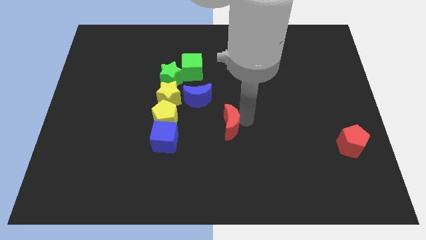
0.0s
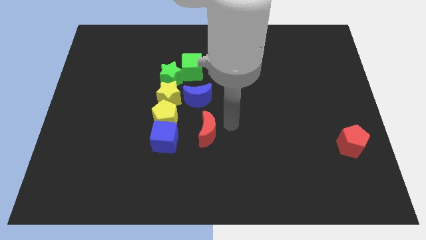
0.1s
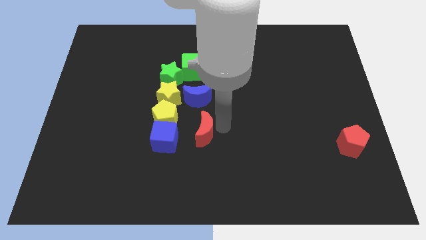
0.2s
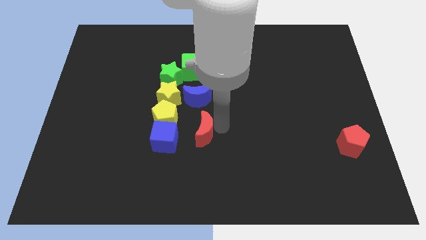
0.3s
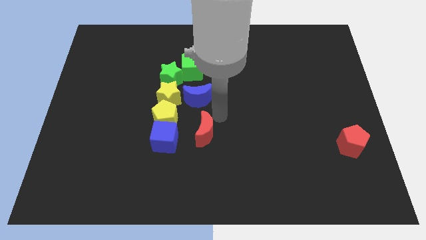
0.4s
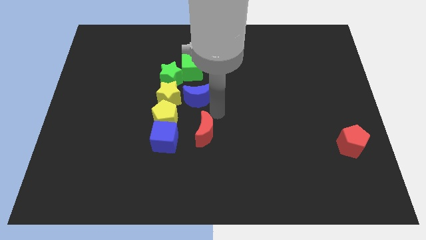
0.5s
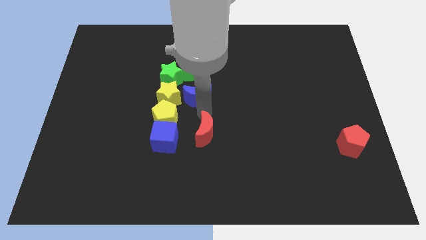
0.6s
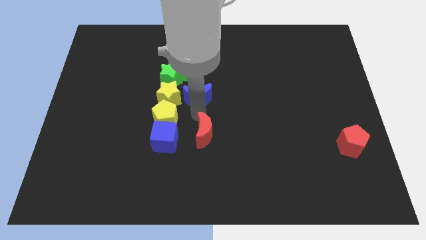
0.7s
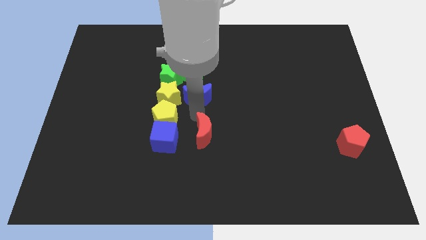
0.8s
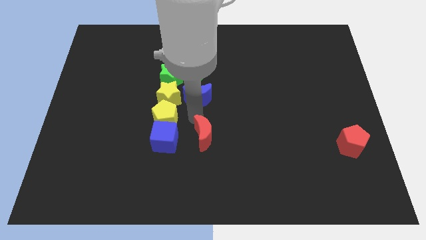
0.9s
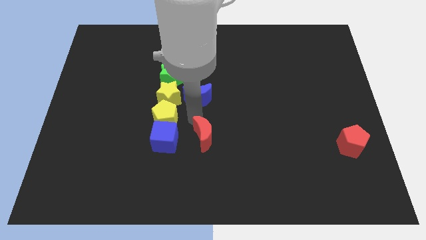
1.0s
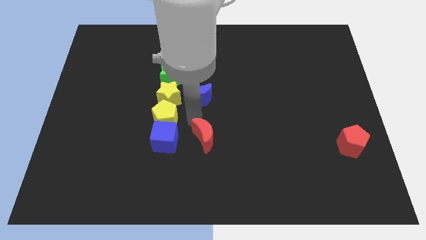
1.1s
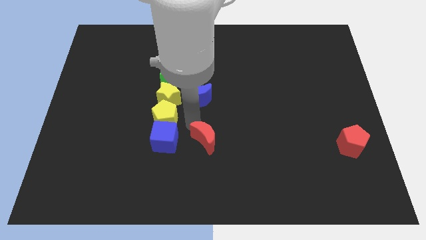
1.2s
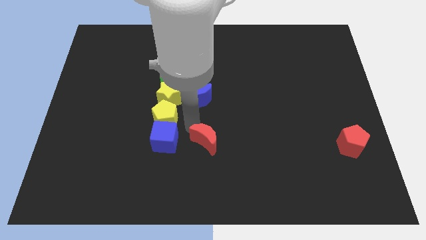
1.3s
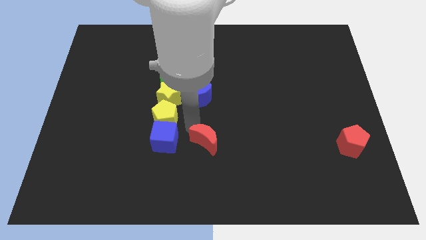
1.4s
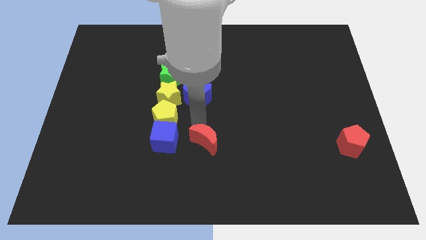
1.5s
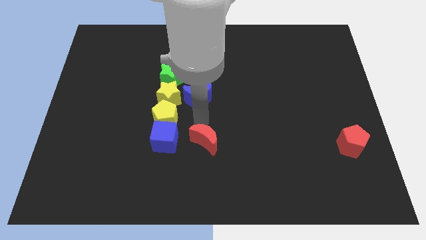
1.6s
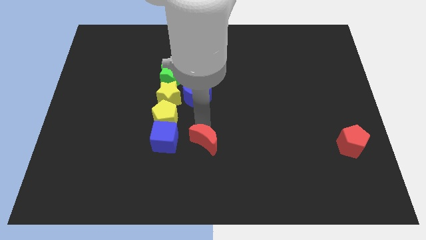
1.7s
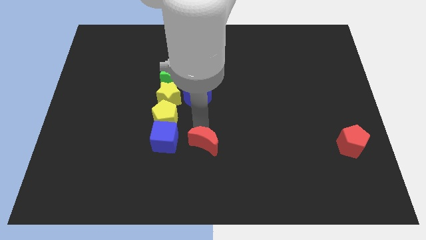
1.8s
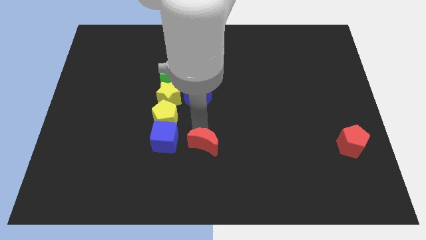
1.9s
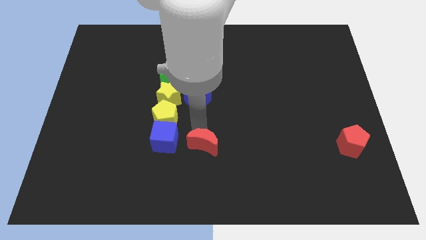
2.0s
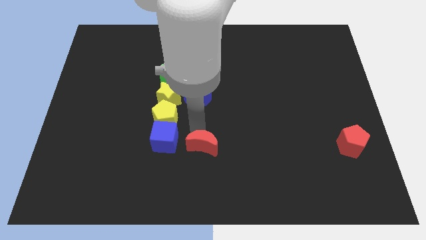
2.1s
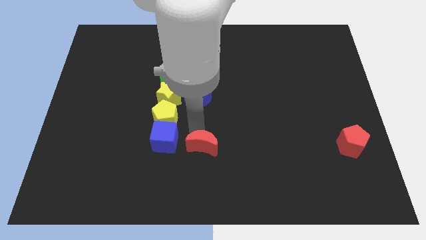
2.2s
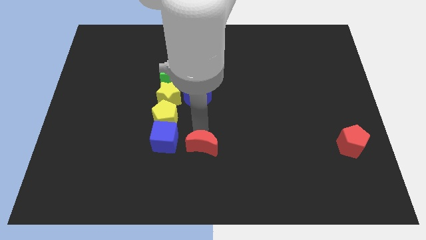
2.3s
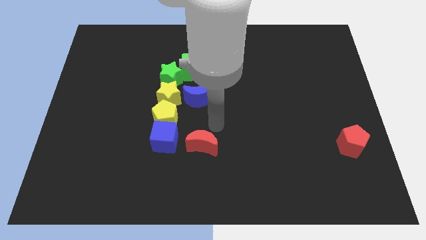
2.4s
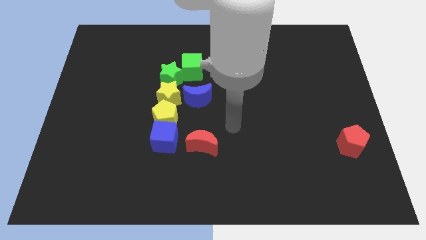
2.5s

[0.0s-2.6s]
move the red moon to the right side of the blue cube

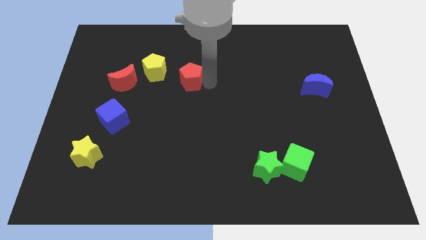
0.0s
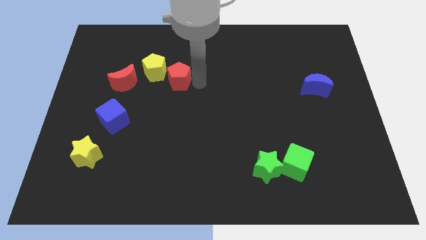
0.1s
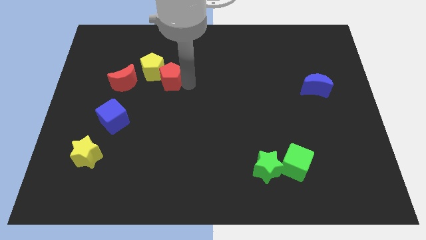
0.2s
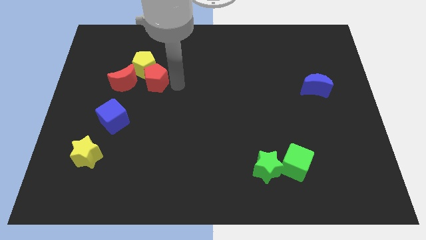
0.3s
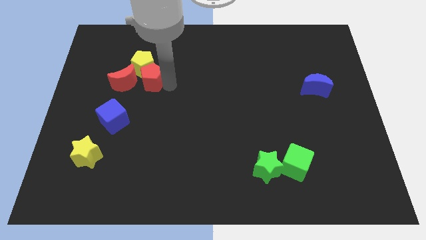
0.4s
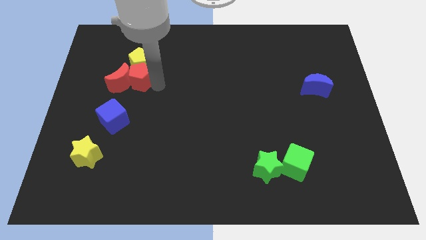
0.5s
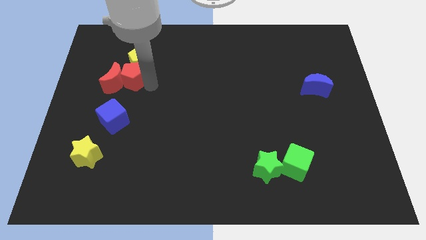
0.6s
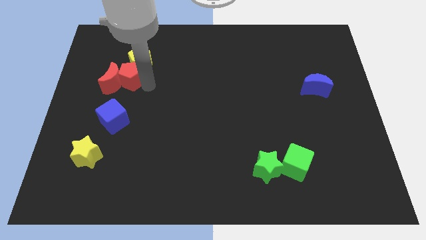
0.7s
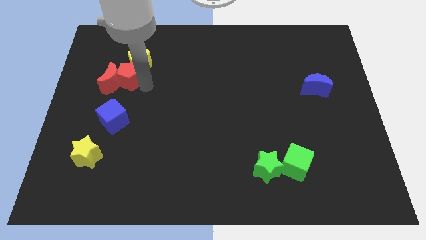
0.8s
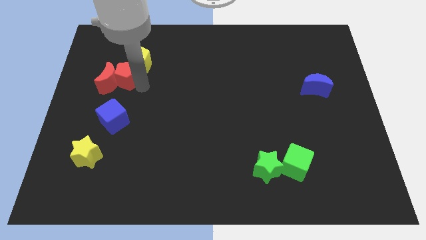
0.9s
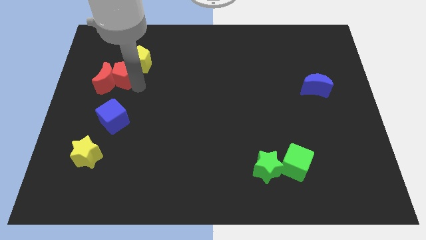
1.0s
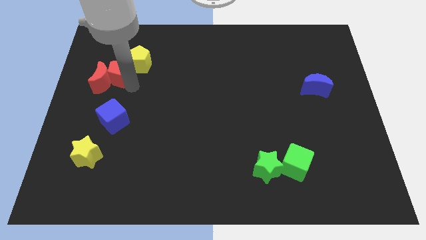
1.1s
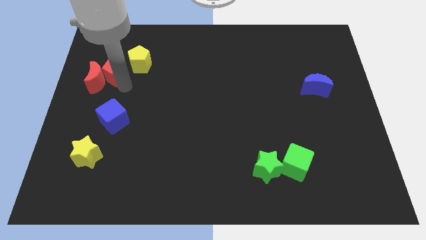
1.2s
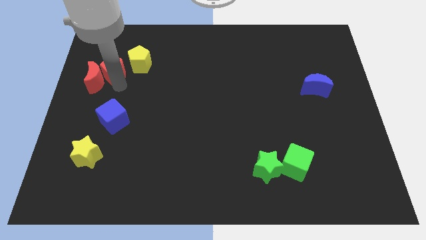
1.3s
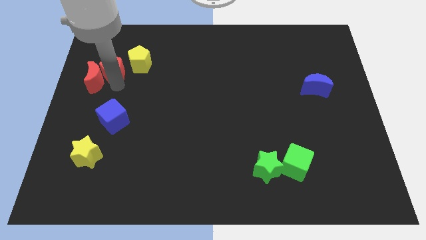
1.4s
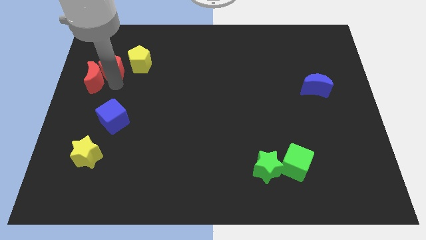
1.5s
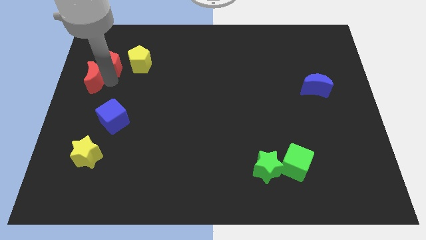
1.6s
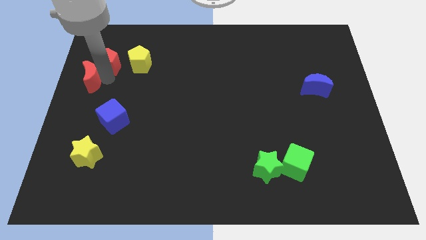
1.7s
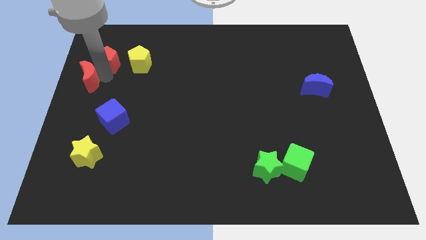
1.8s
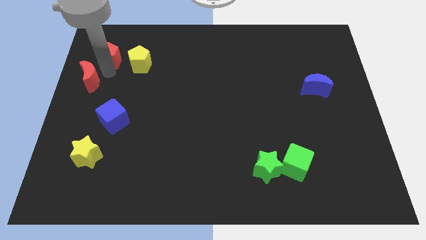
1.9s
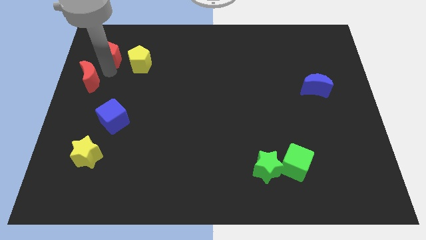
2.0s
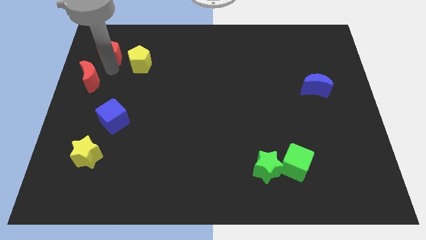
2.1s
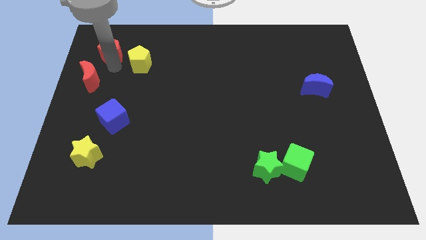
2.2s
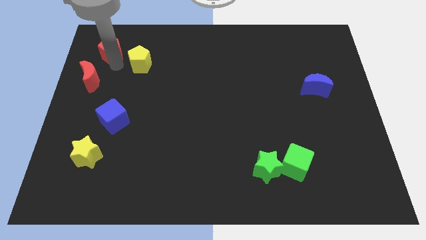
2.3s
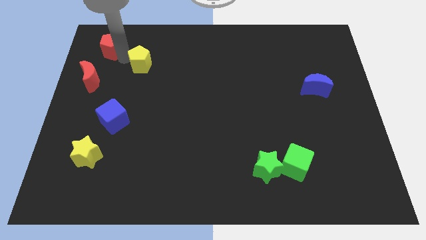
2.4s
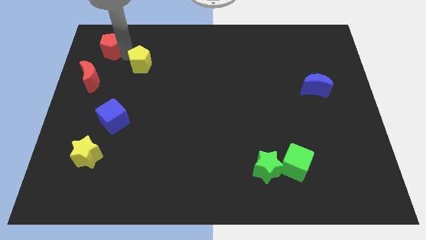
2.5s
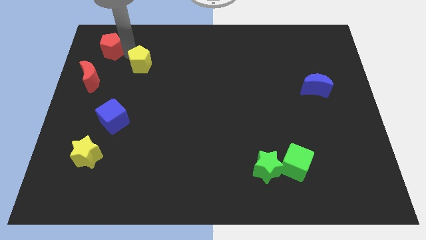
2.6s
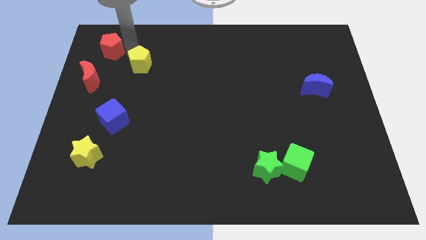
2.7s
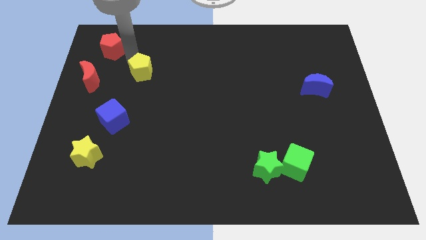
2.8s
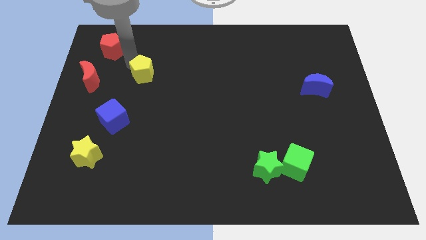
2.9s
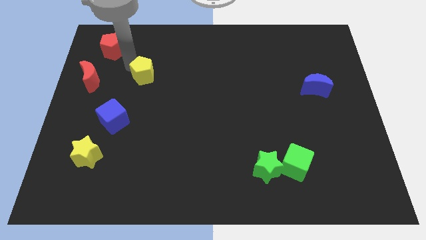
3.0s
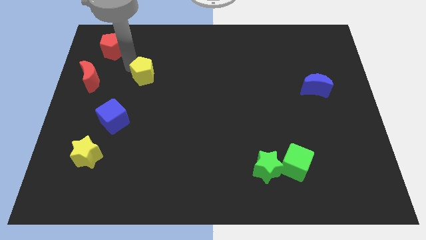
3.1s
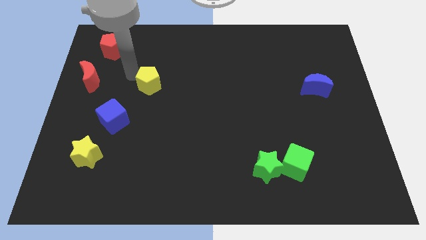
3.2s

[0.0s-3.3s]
make a triangle with the red blocks and yellow pentagon at the top left of the table

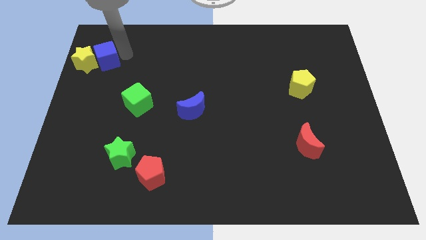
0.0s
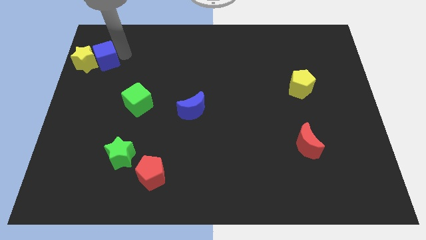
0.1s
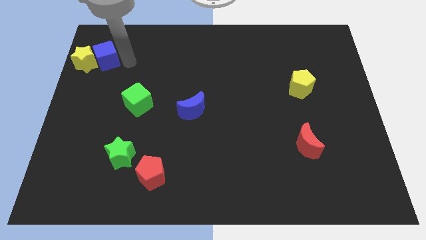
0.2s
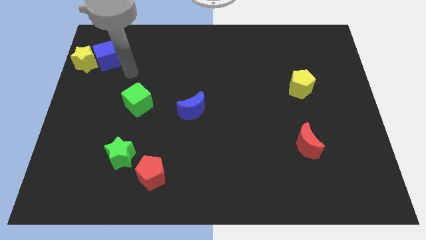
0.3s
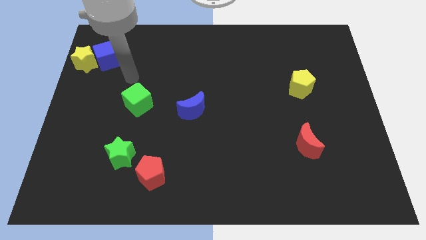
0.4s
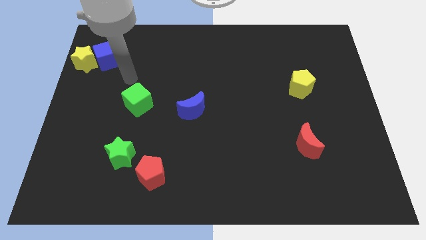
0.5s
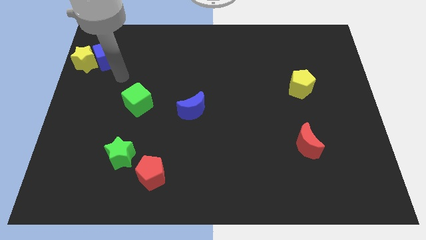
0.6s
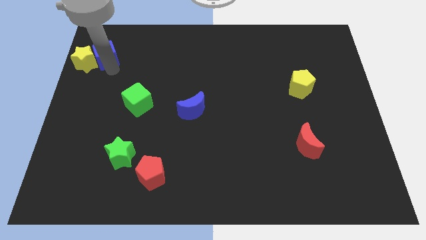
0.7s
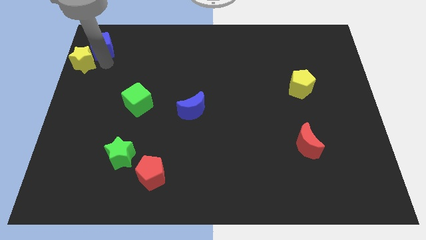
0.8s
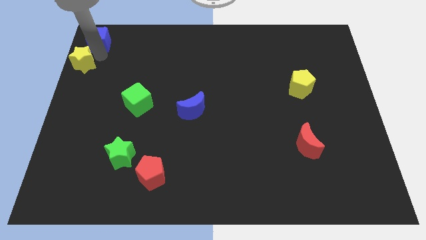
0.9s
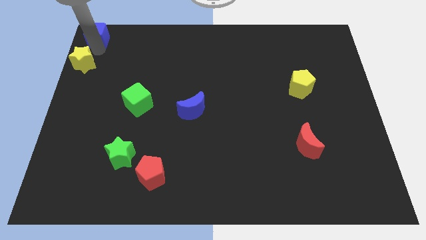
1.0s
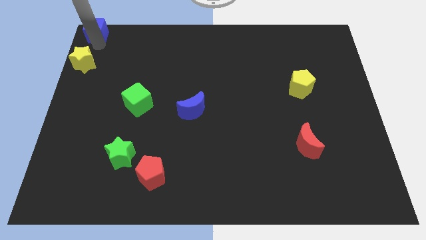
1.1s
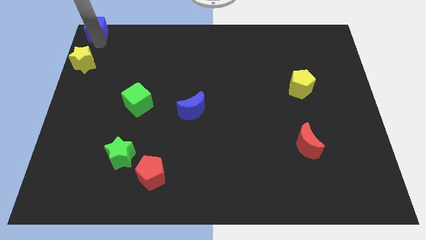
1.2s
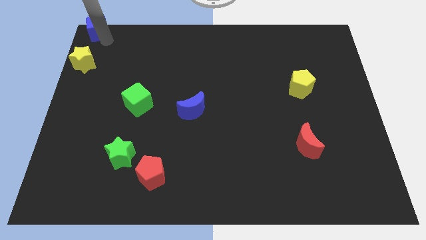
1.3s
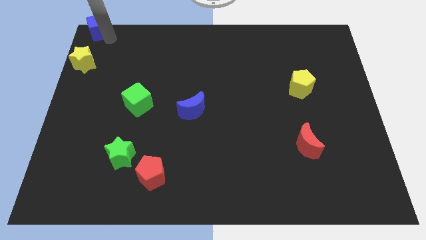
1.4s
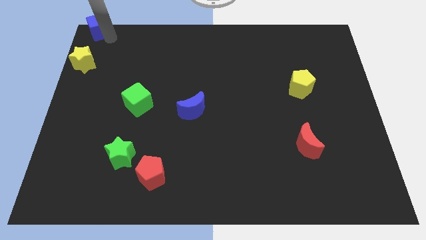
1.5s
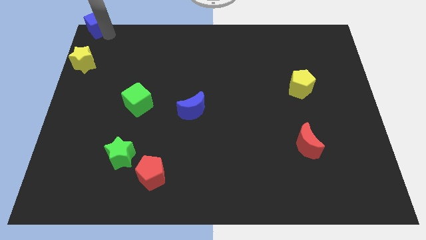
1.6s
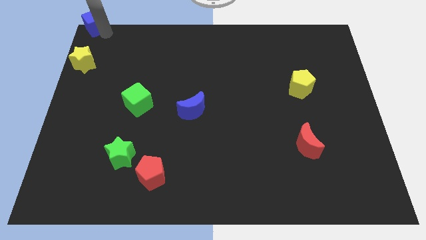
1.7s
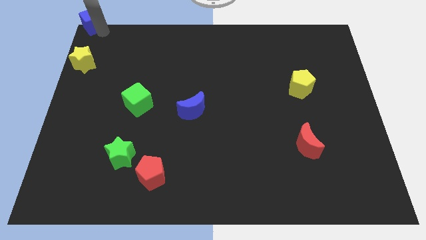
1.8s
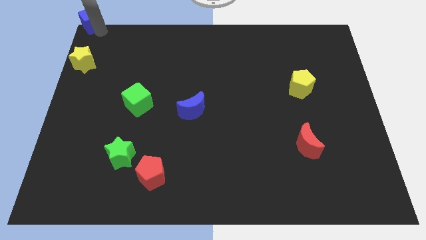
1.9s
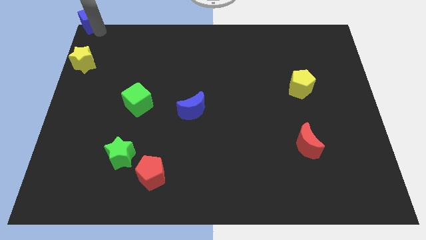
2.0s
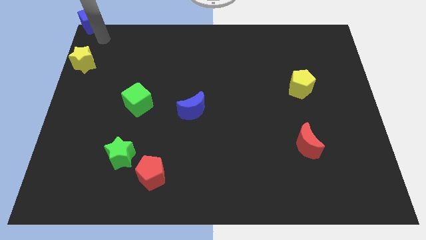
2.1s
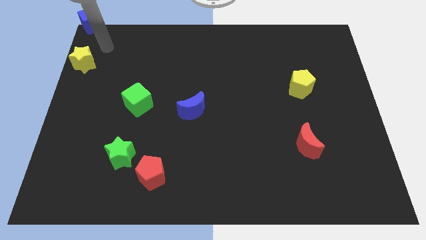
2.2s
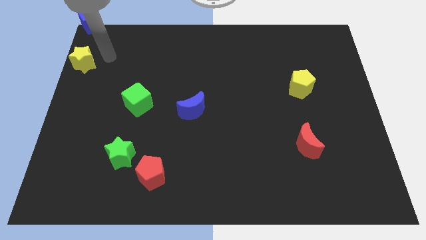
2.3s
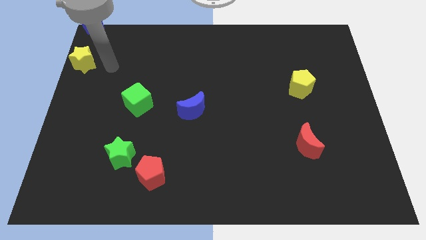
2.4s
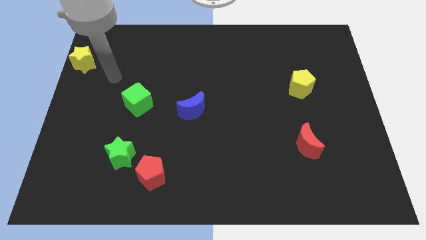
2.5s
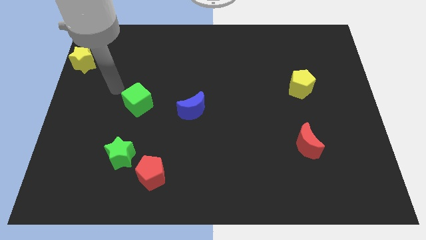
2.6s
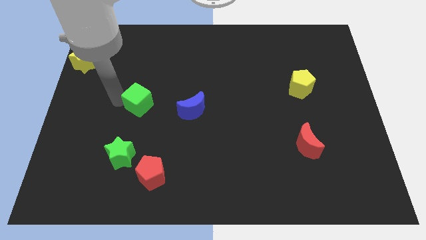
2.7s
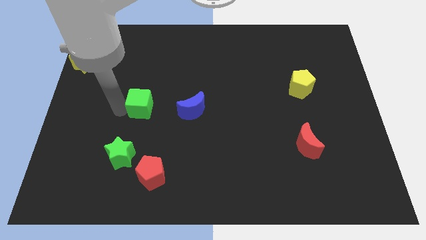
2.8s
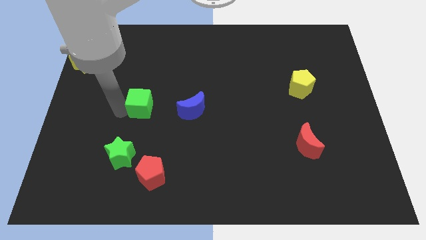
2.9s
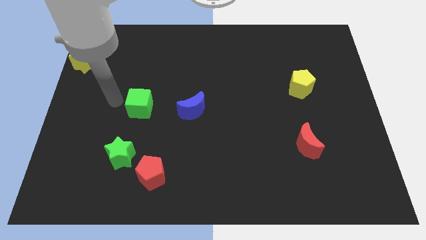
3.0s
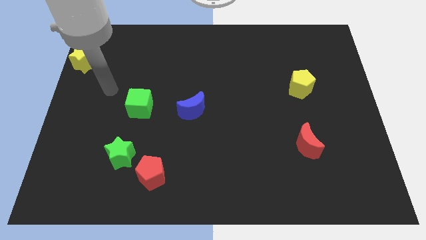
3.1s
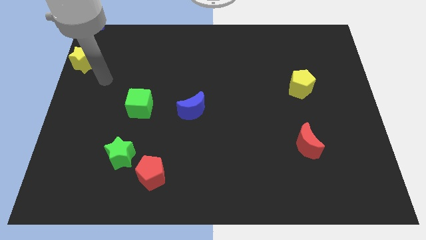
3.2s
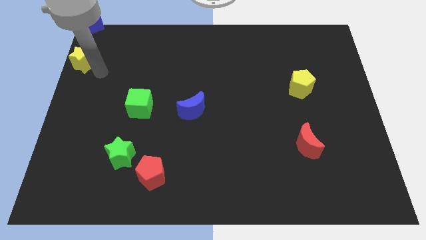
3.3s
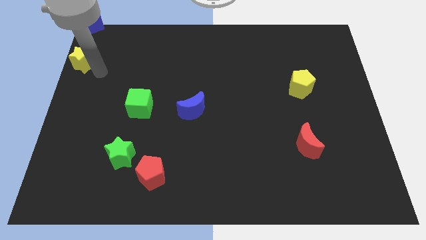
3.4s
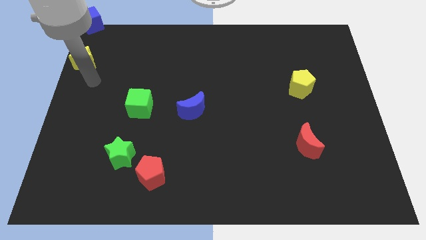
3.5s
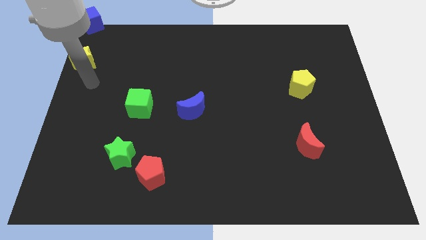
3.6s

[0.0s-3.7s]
place the blue cube towards the top left corner of the board
